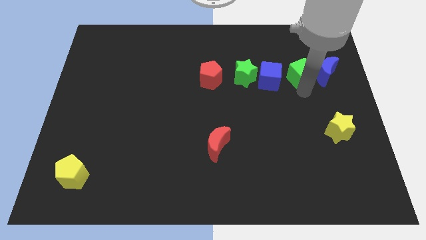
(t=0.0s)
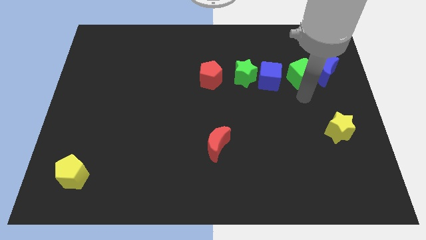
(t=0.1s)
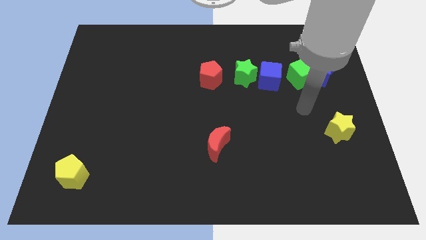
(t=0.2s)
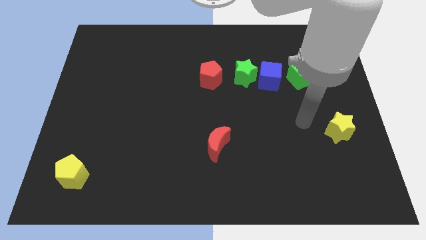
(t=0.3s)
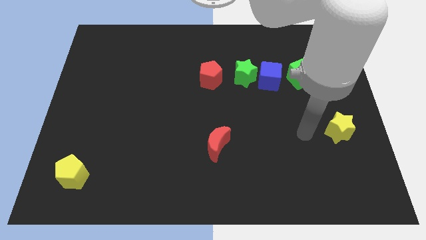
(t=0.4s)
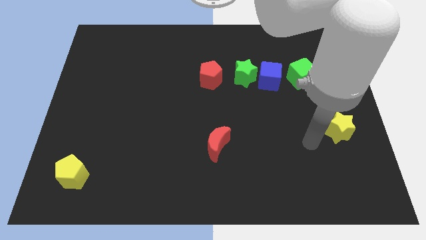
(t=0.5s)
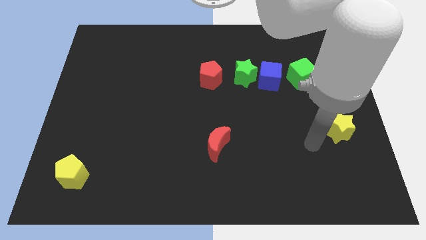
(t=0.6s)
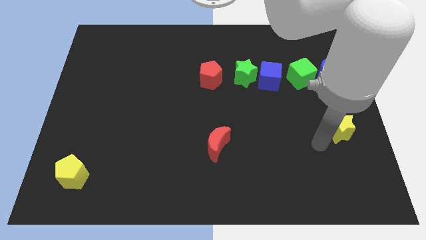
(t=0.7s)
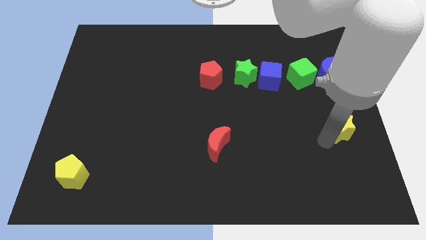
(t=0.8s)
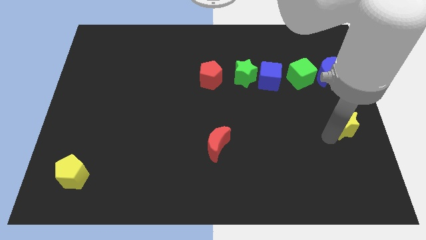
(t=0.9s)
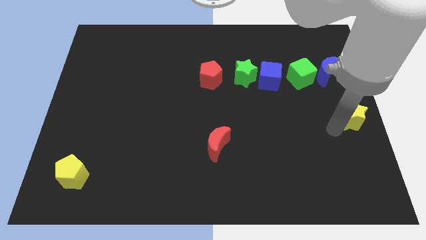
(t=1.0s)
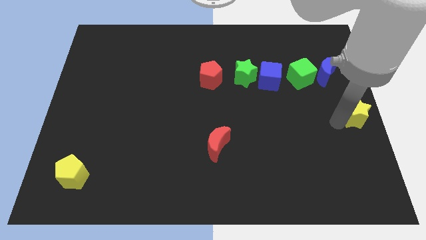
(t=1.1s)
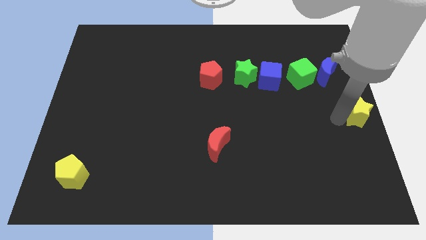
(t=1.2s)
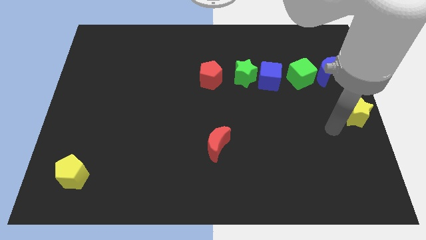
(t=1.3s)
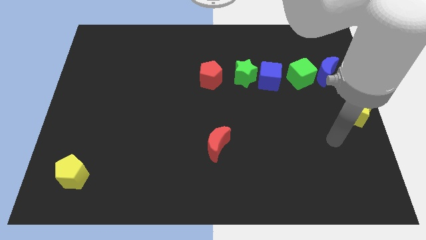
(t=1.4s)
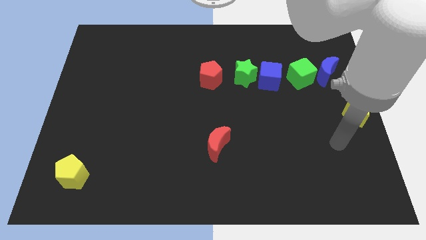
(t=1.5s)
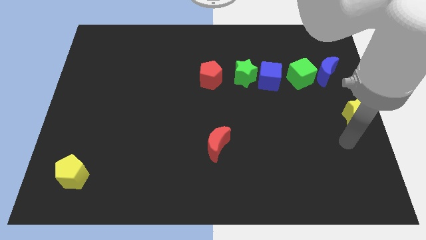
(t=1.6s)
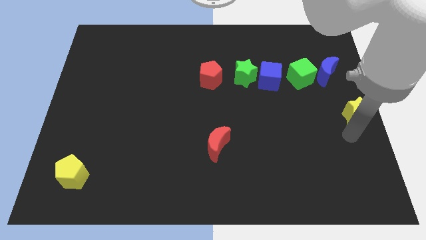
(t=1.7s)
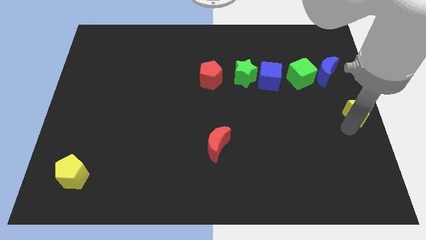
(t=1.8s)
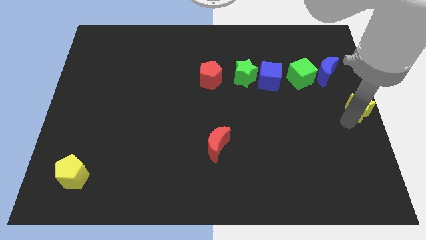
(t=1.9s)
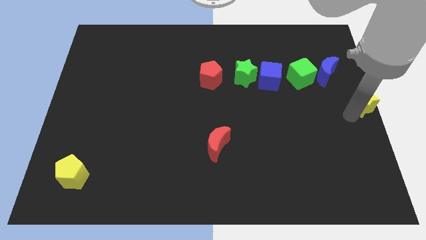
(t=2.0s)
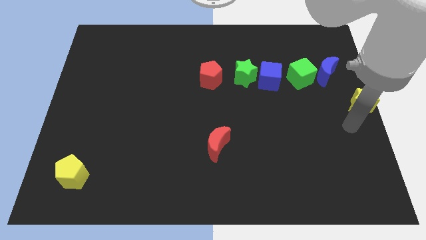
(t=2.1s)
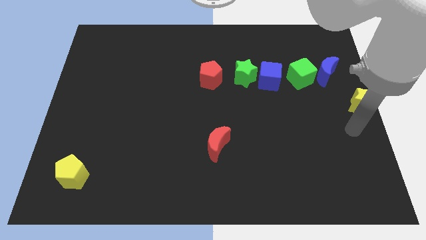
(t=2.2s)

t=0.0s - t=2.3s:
move the yellow star to the center right of the board

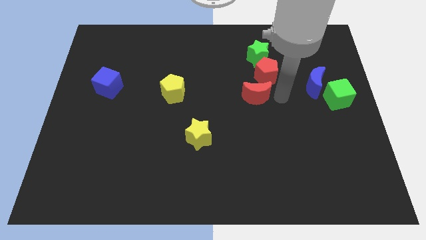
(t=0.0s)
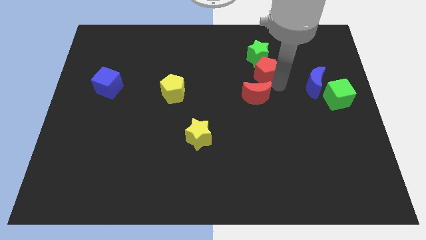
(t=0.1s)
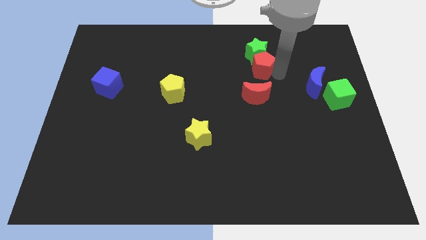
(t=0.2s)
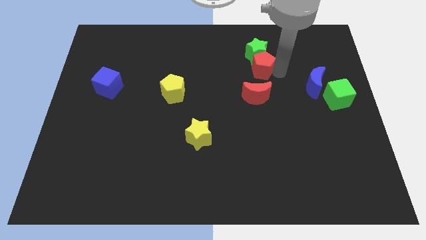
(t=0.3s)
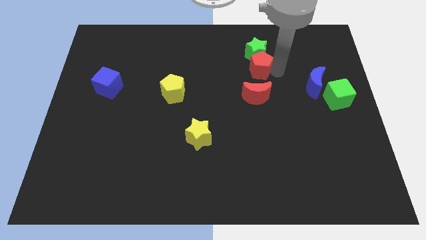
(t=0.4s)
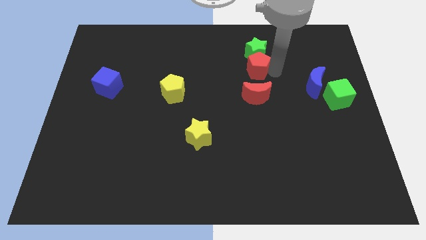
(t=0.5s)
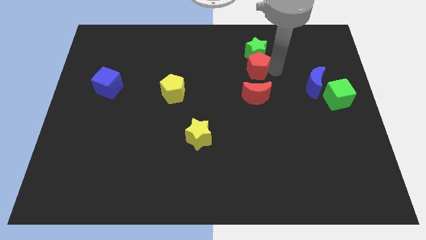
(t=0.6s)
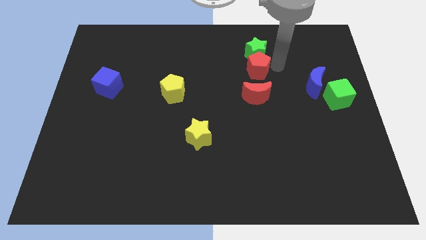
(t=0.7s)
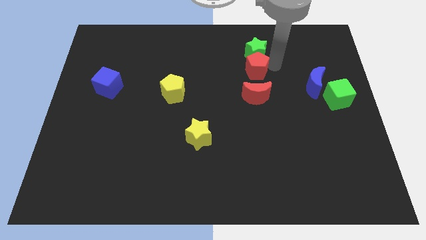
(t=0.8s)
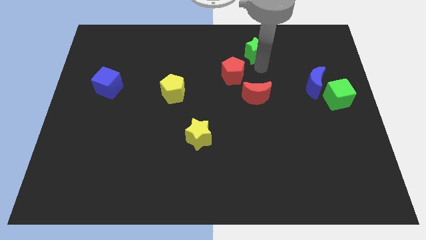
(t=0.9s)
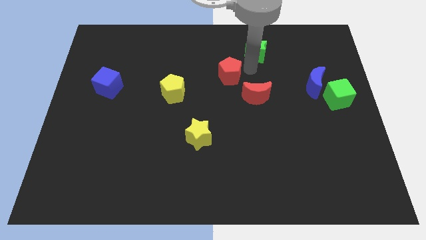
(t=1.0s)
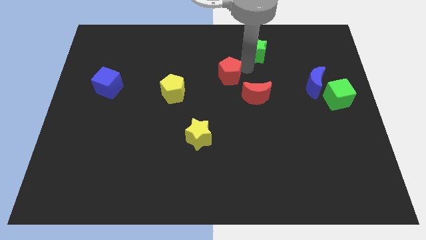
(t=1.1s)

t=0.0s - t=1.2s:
push the red pentagon away from the green star

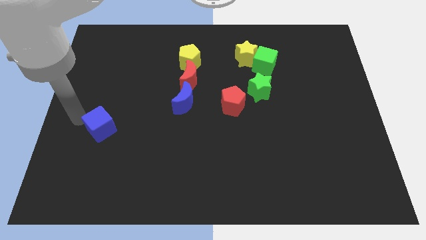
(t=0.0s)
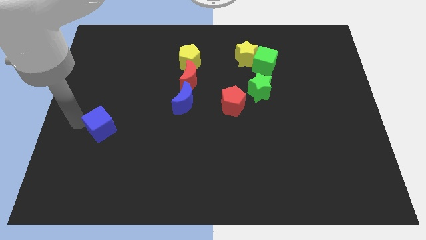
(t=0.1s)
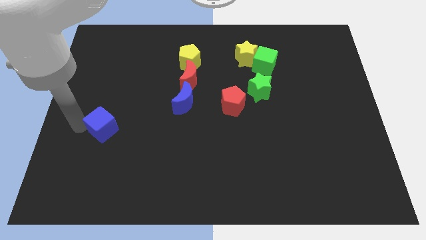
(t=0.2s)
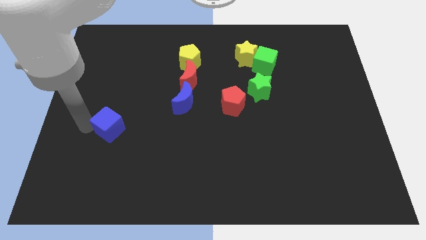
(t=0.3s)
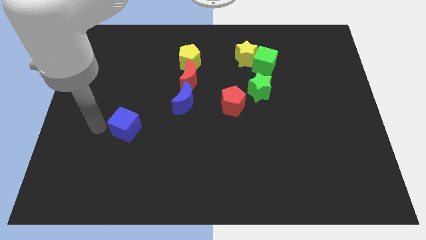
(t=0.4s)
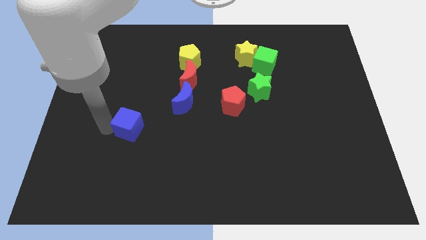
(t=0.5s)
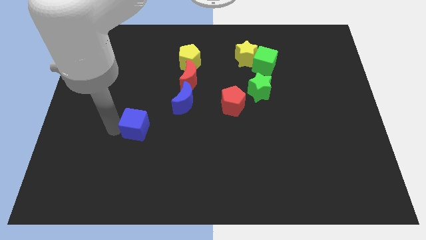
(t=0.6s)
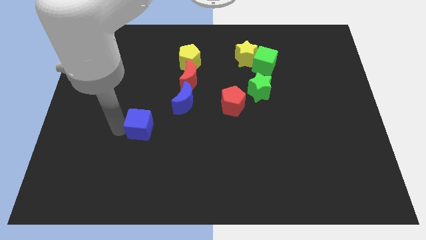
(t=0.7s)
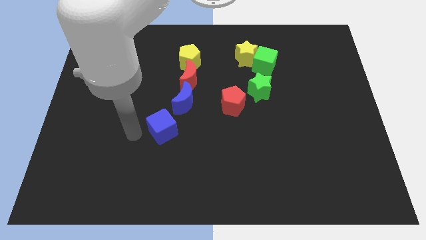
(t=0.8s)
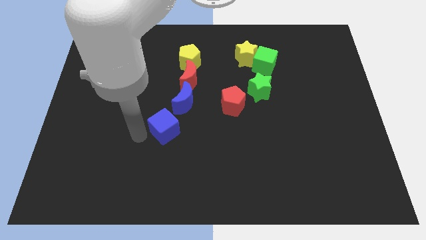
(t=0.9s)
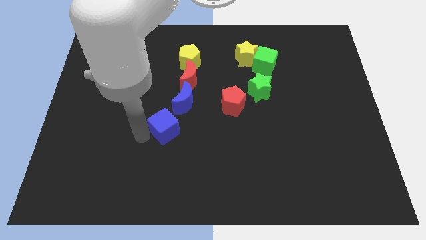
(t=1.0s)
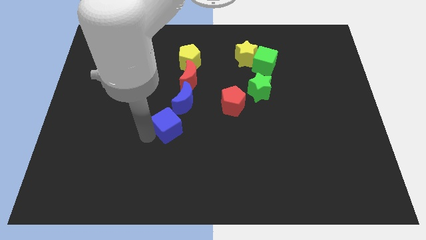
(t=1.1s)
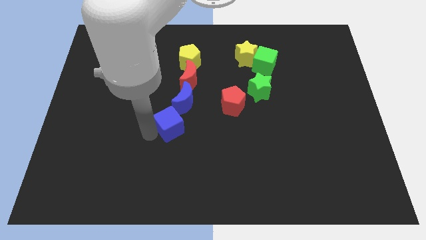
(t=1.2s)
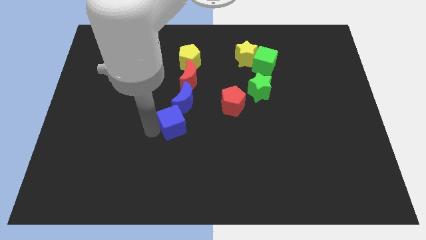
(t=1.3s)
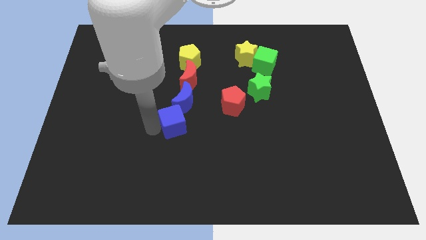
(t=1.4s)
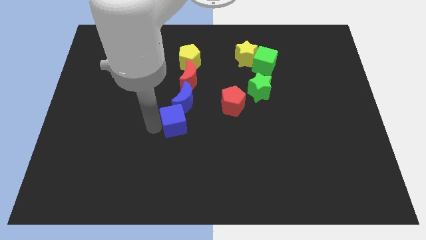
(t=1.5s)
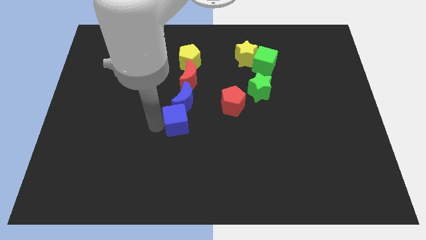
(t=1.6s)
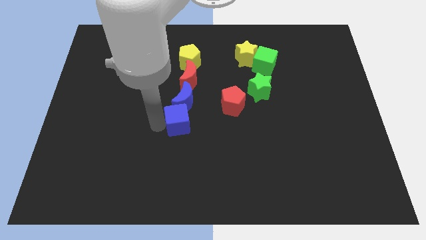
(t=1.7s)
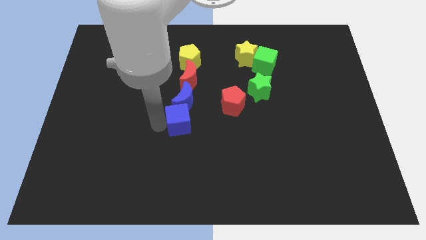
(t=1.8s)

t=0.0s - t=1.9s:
place the blue cube below the blue moon

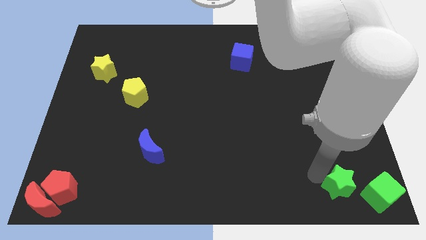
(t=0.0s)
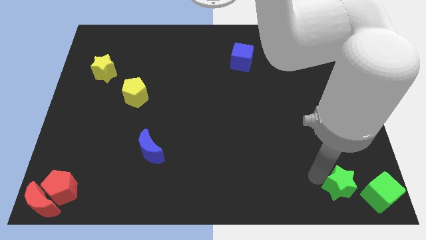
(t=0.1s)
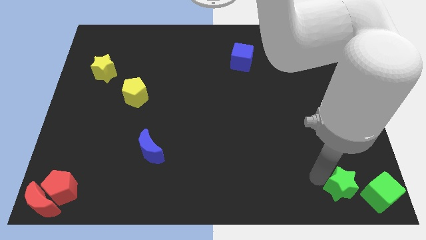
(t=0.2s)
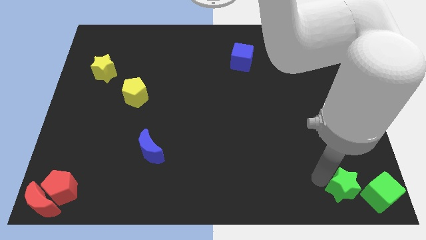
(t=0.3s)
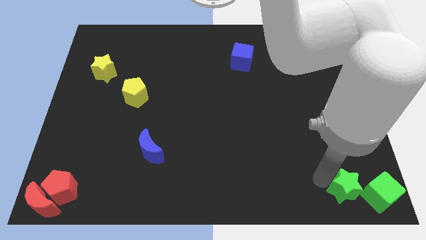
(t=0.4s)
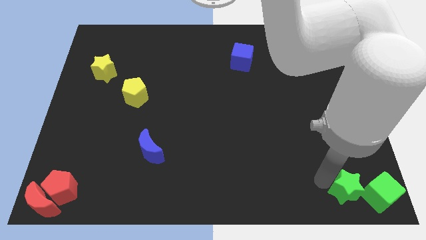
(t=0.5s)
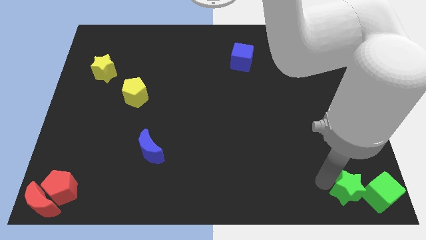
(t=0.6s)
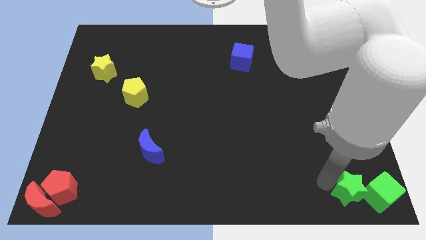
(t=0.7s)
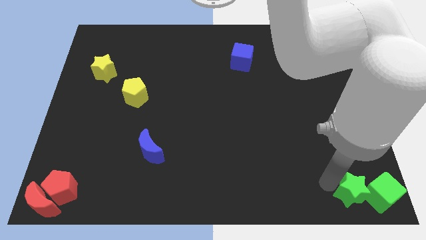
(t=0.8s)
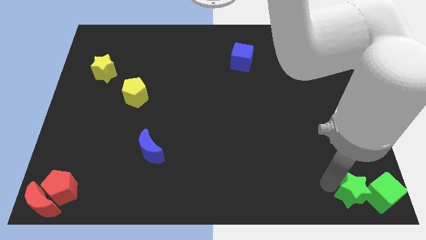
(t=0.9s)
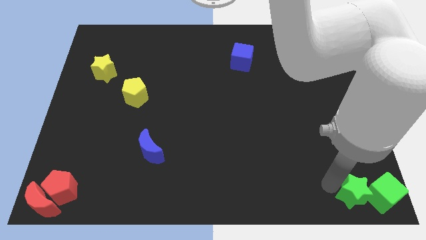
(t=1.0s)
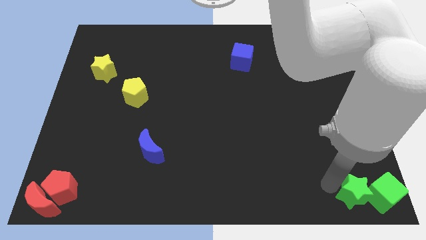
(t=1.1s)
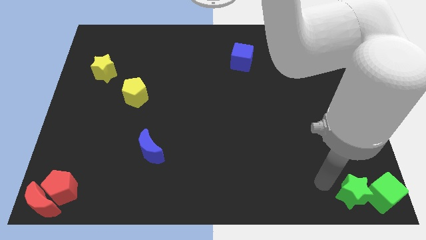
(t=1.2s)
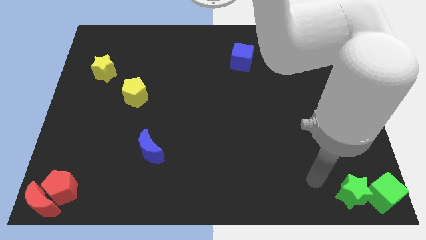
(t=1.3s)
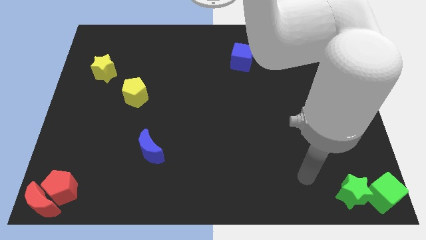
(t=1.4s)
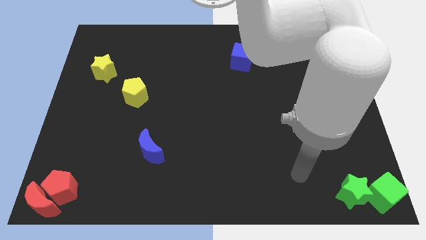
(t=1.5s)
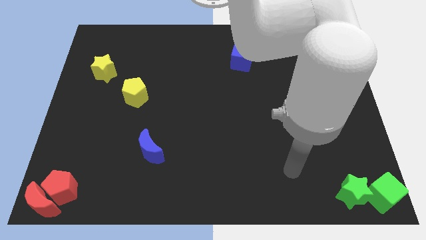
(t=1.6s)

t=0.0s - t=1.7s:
move the green star into the green cube

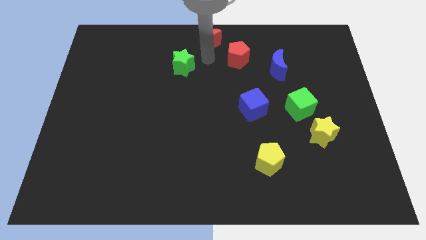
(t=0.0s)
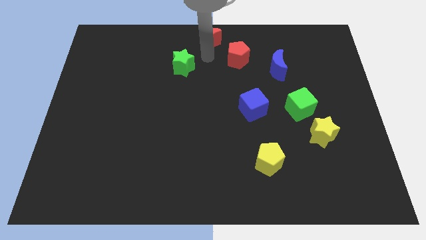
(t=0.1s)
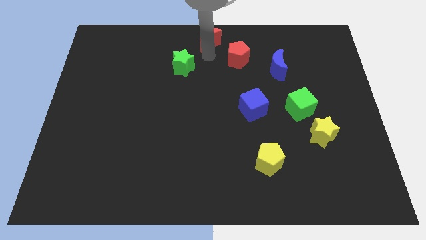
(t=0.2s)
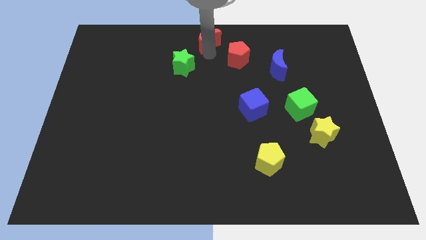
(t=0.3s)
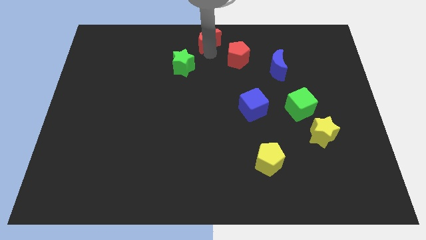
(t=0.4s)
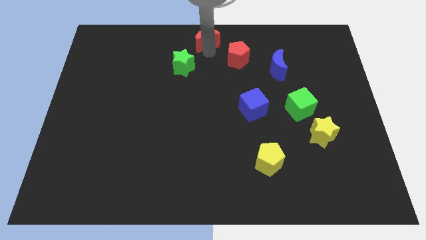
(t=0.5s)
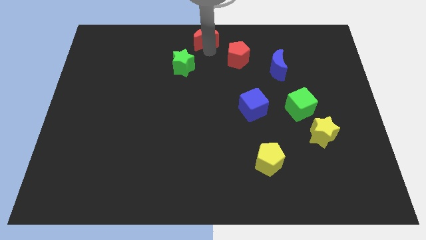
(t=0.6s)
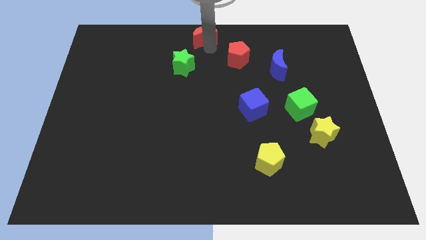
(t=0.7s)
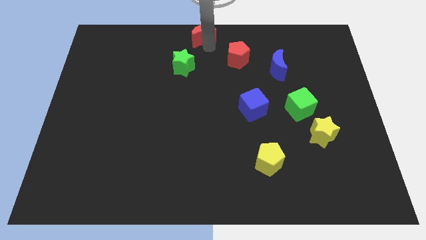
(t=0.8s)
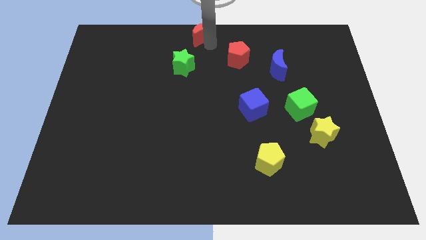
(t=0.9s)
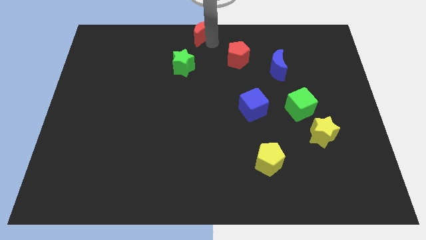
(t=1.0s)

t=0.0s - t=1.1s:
place red moon to the top center

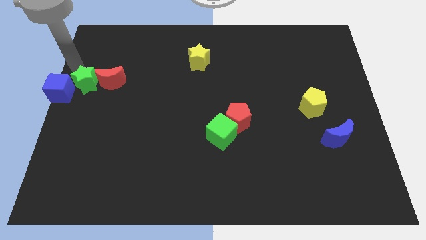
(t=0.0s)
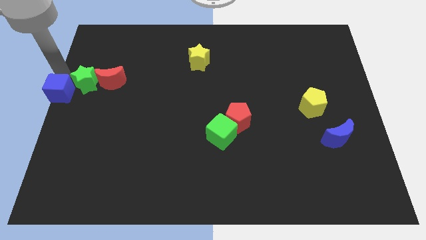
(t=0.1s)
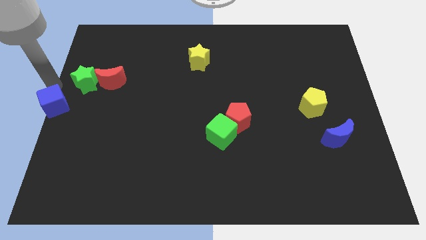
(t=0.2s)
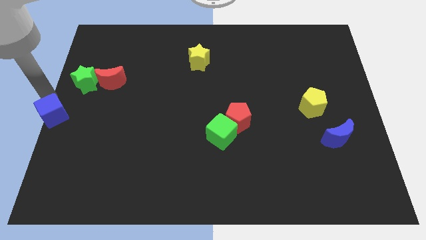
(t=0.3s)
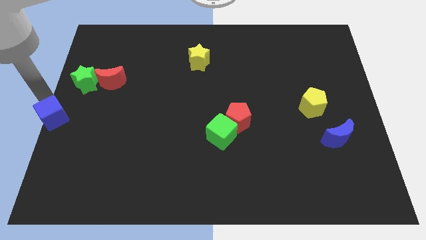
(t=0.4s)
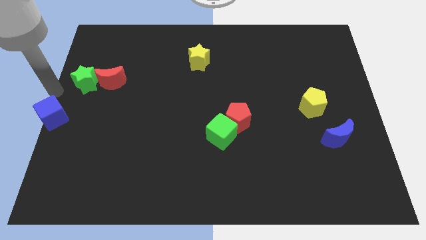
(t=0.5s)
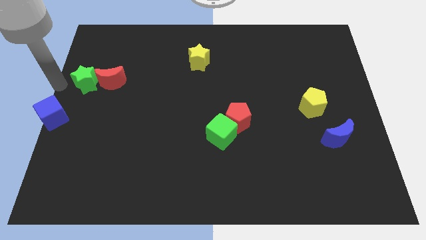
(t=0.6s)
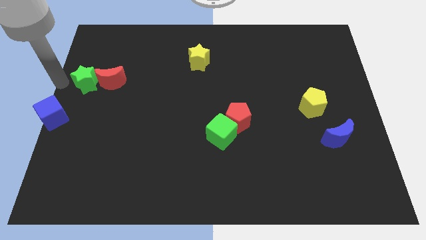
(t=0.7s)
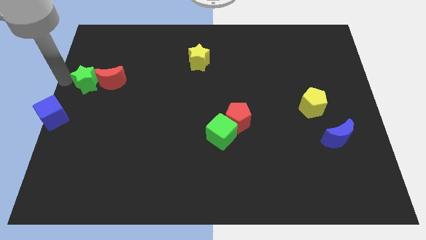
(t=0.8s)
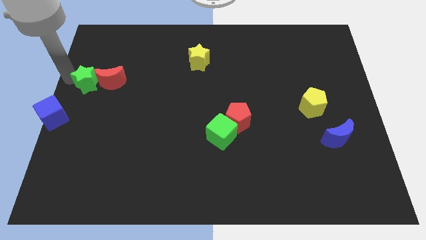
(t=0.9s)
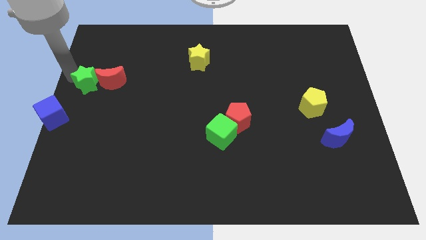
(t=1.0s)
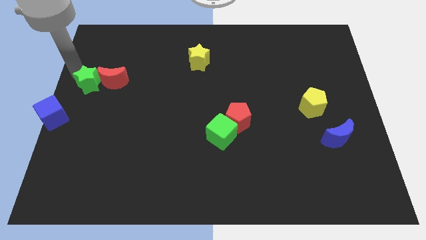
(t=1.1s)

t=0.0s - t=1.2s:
move the blue cube away from the green star
